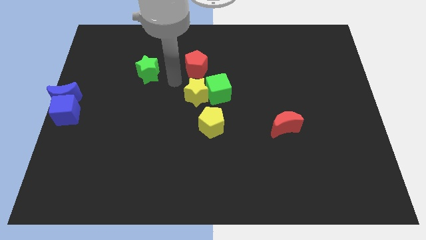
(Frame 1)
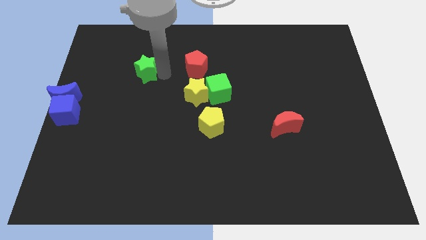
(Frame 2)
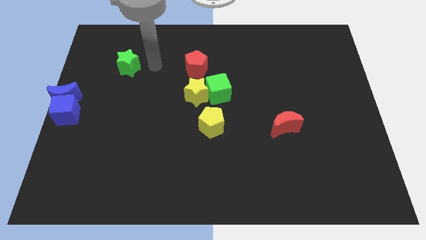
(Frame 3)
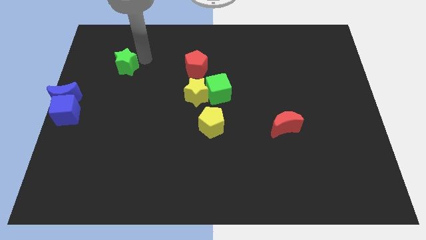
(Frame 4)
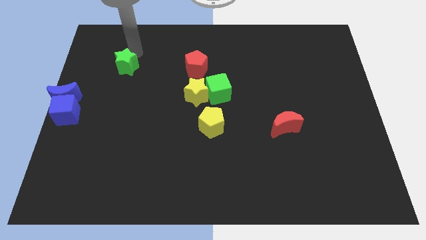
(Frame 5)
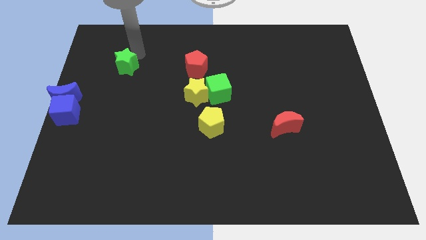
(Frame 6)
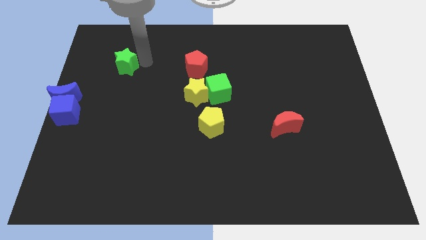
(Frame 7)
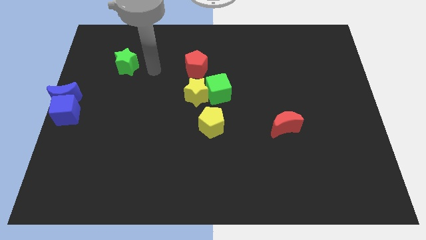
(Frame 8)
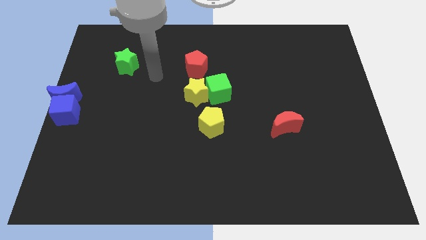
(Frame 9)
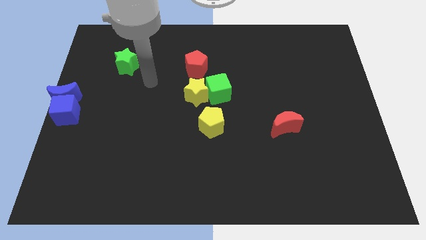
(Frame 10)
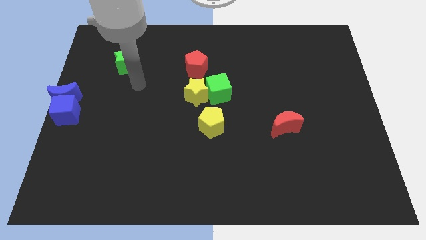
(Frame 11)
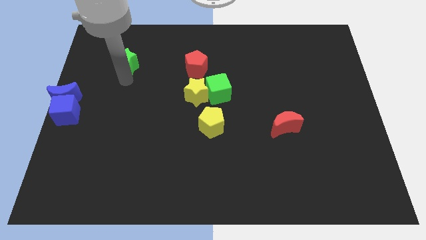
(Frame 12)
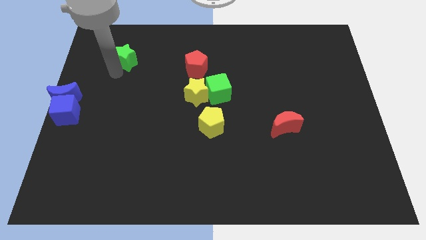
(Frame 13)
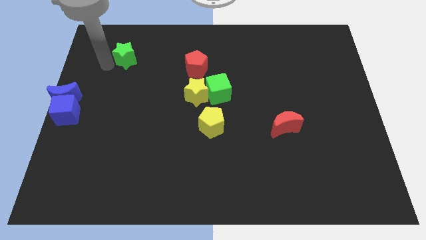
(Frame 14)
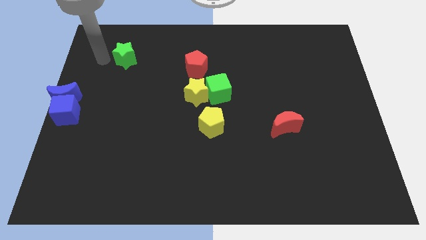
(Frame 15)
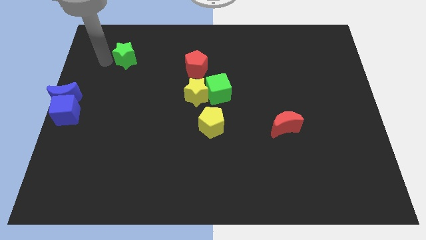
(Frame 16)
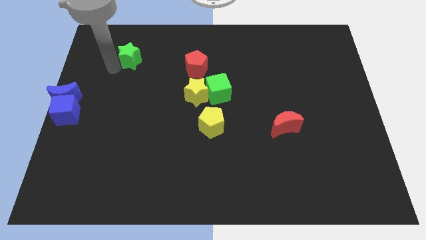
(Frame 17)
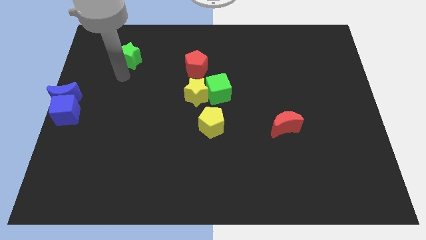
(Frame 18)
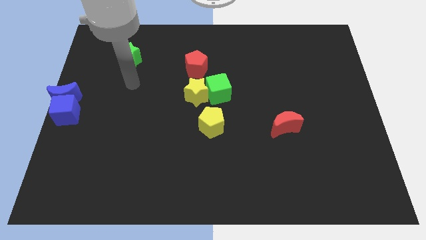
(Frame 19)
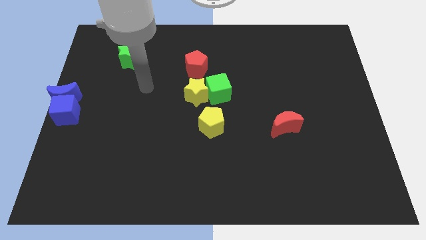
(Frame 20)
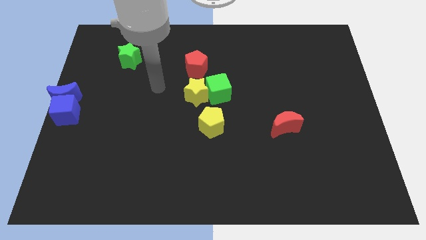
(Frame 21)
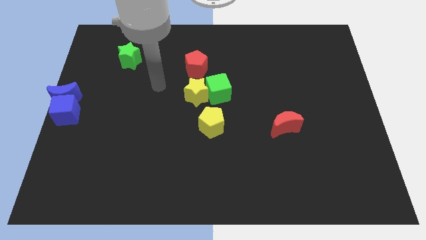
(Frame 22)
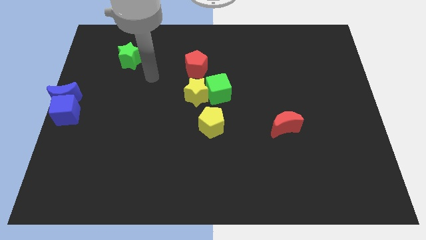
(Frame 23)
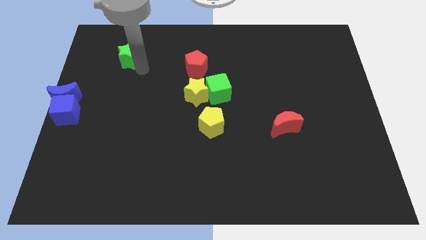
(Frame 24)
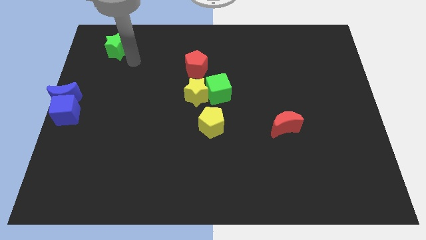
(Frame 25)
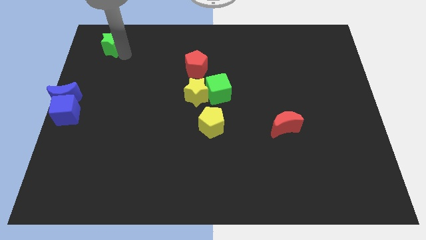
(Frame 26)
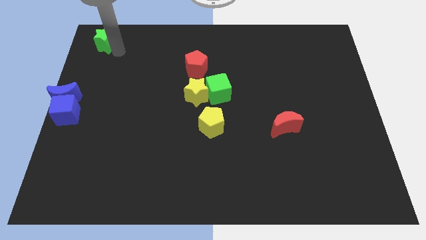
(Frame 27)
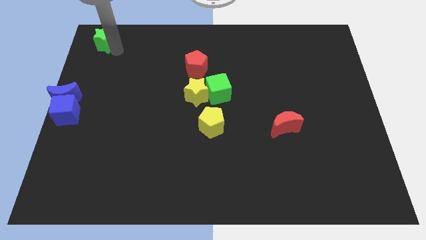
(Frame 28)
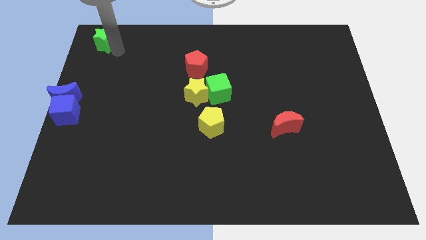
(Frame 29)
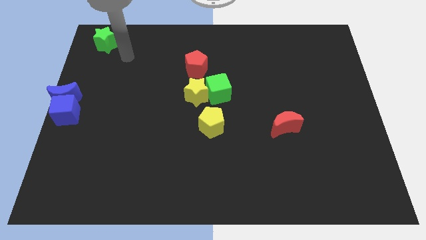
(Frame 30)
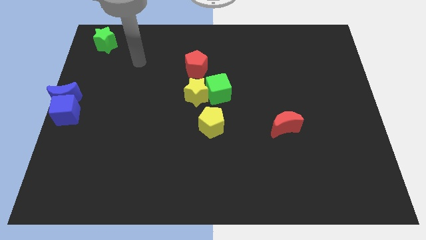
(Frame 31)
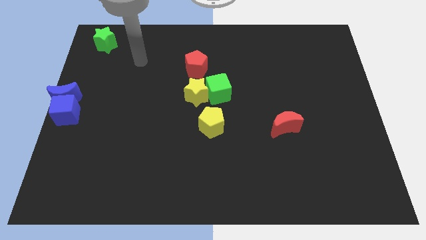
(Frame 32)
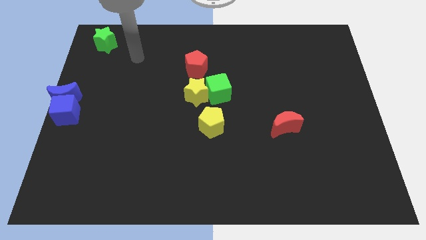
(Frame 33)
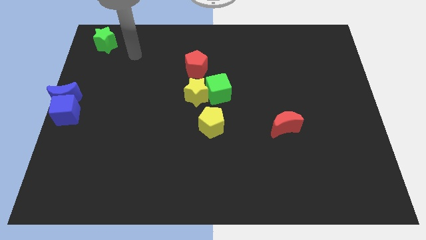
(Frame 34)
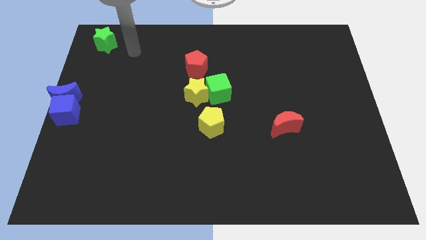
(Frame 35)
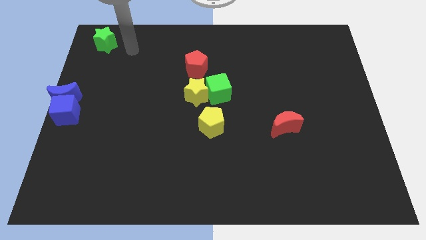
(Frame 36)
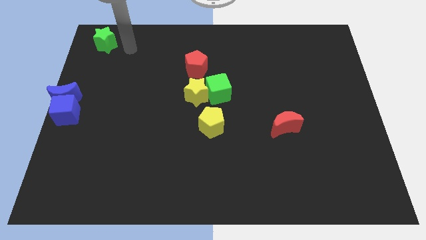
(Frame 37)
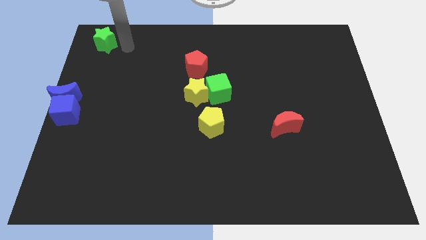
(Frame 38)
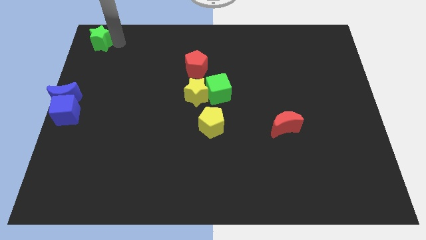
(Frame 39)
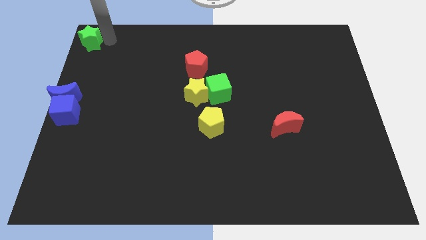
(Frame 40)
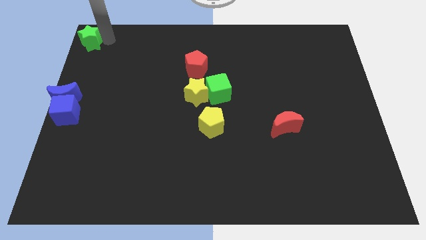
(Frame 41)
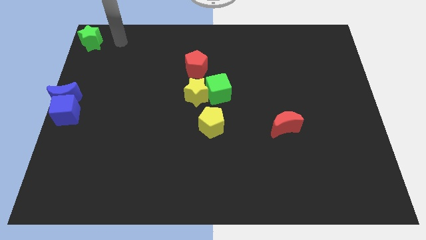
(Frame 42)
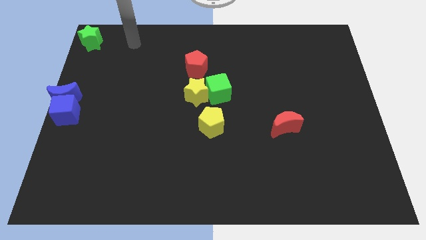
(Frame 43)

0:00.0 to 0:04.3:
push the green star to the top left corner of the board

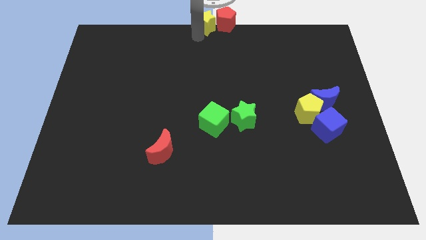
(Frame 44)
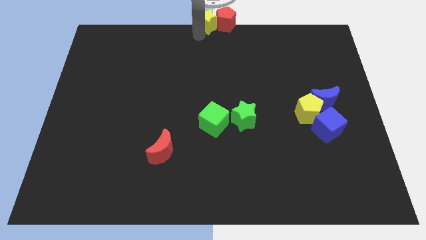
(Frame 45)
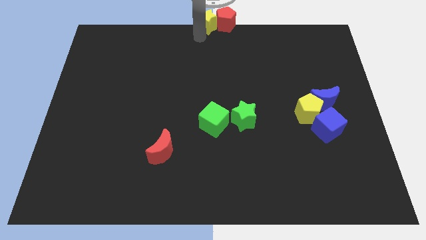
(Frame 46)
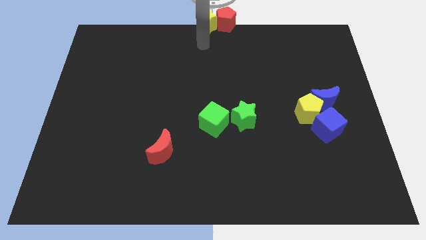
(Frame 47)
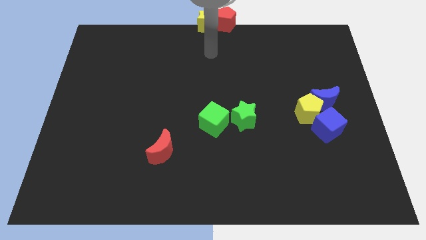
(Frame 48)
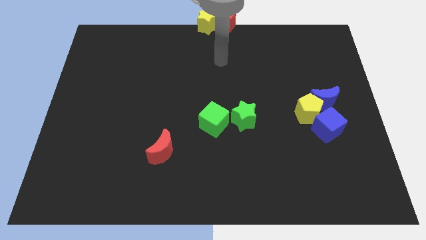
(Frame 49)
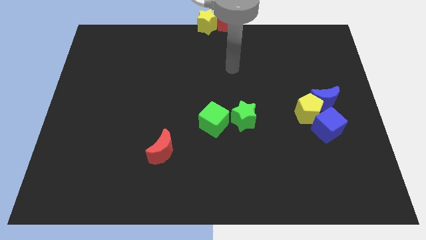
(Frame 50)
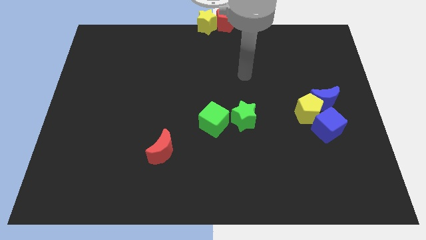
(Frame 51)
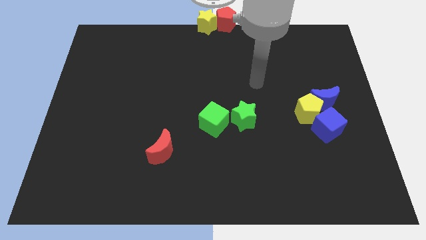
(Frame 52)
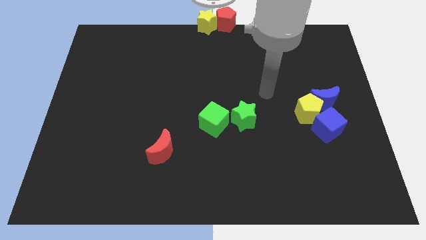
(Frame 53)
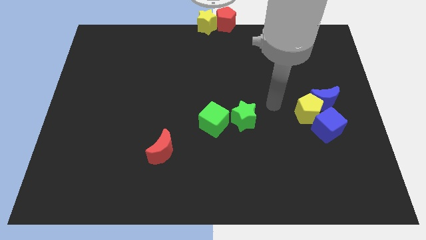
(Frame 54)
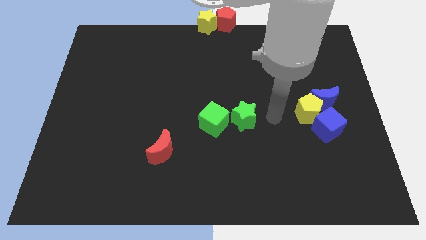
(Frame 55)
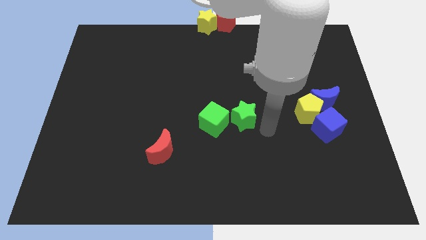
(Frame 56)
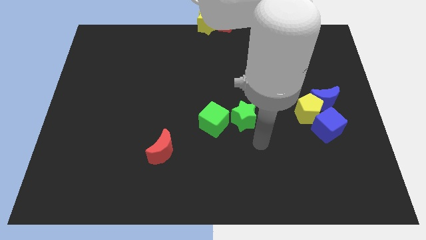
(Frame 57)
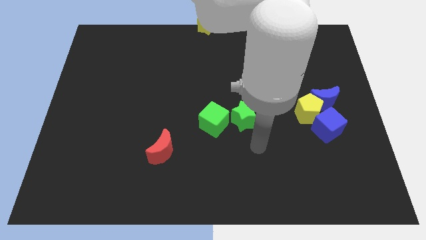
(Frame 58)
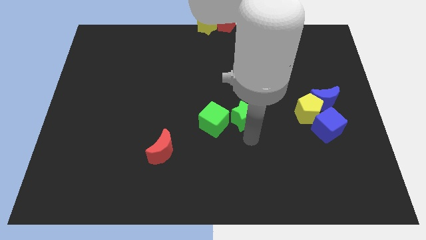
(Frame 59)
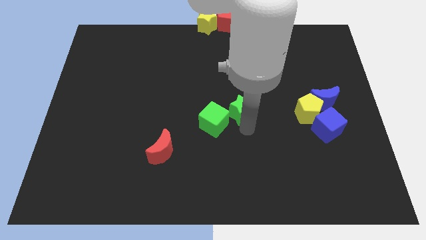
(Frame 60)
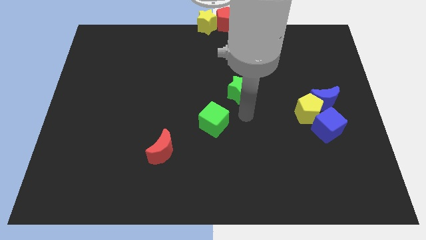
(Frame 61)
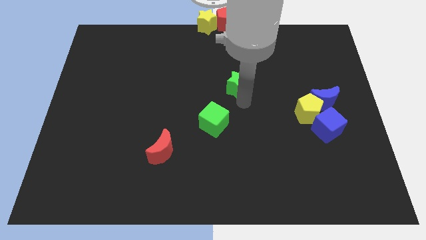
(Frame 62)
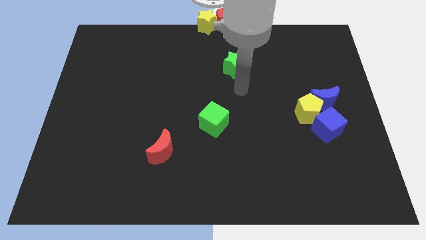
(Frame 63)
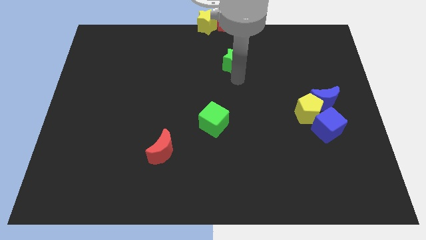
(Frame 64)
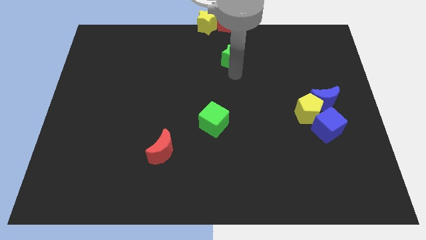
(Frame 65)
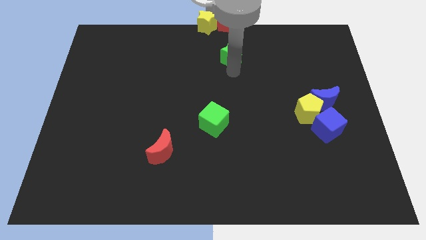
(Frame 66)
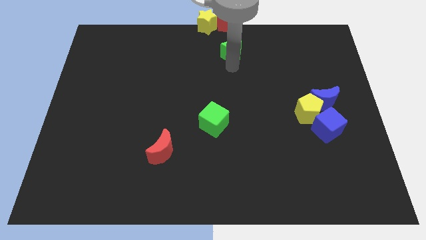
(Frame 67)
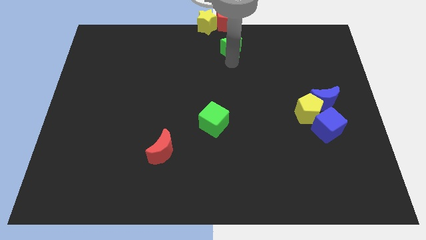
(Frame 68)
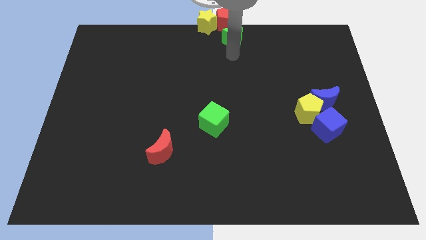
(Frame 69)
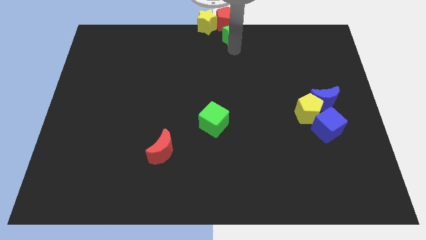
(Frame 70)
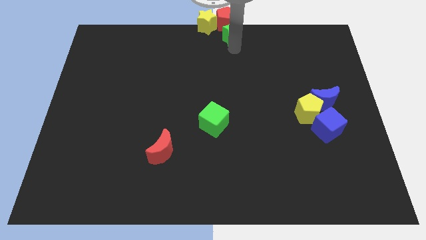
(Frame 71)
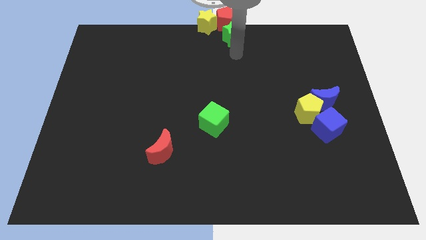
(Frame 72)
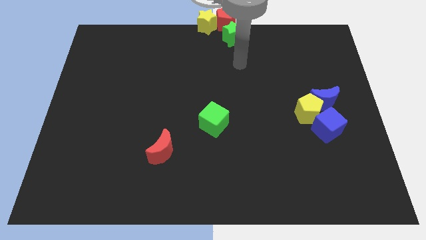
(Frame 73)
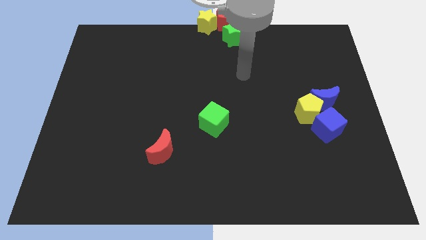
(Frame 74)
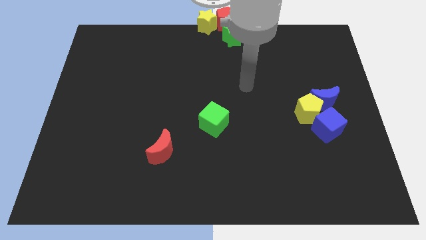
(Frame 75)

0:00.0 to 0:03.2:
move the green star towards top center

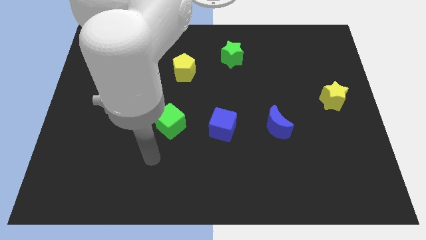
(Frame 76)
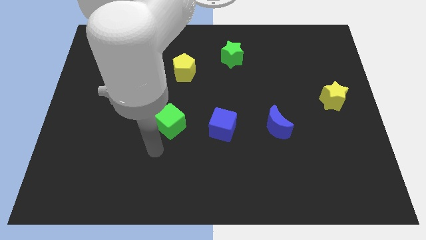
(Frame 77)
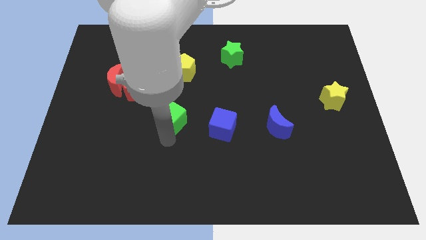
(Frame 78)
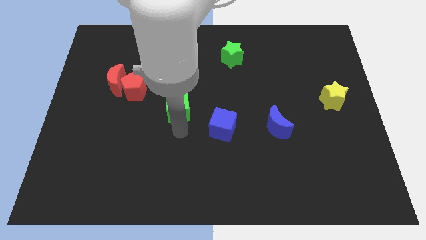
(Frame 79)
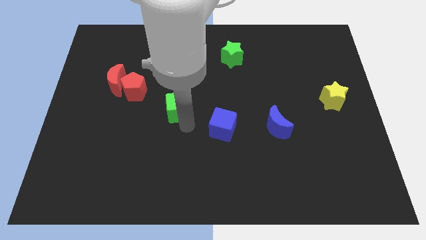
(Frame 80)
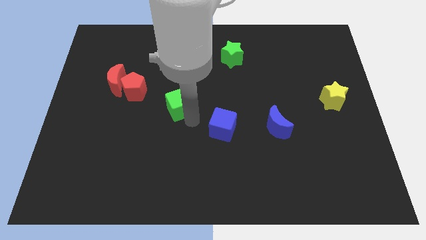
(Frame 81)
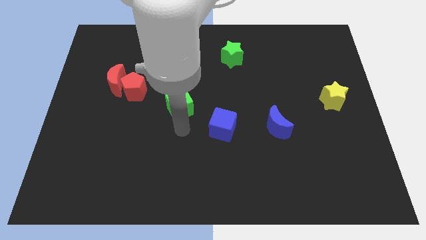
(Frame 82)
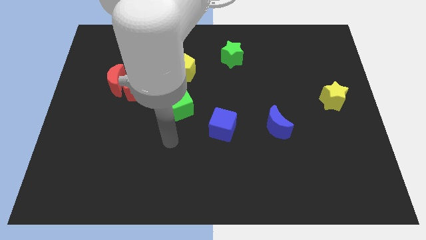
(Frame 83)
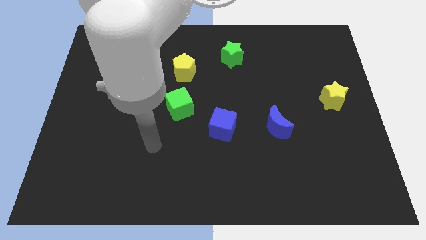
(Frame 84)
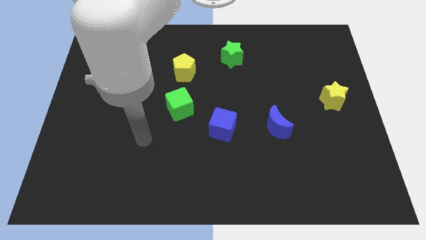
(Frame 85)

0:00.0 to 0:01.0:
place green cube below yellow pentagon

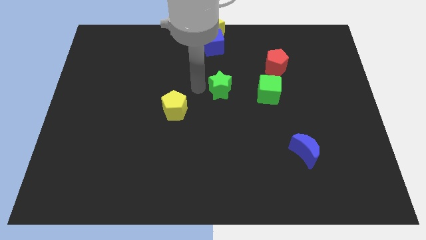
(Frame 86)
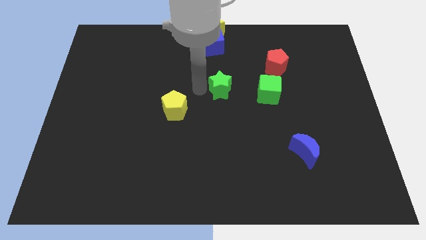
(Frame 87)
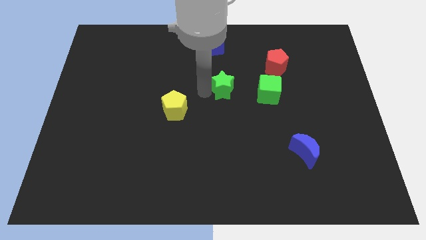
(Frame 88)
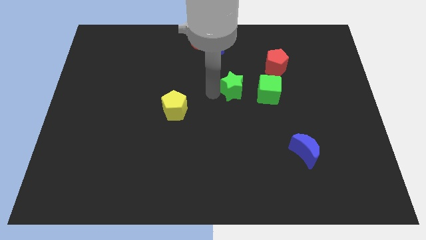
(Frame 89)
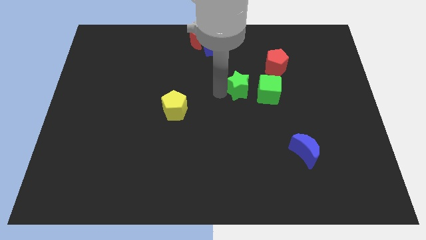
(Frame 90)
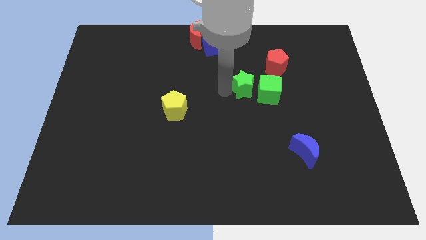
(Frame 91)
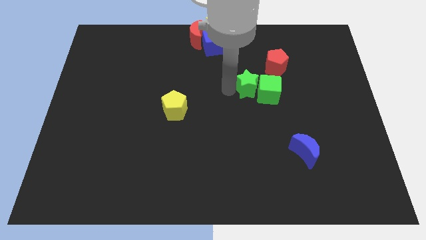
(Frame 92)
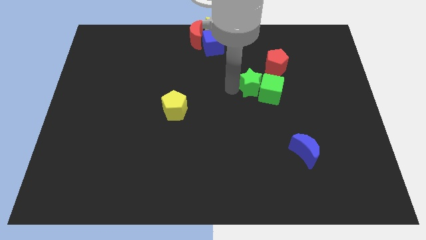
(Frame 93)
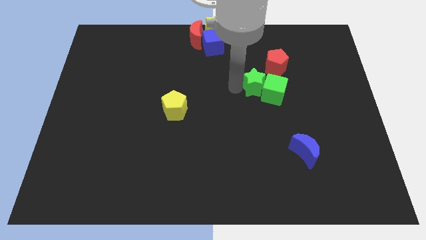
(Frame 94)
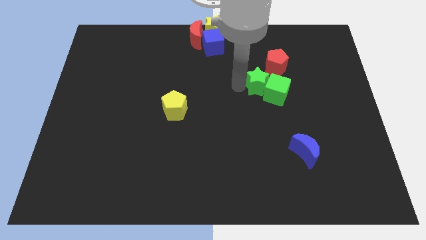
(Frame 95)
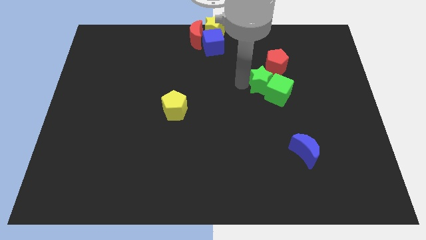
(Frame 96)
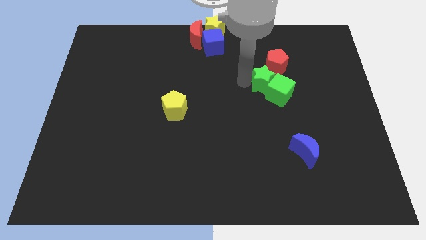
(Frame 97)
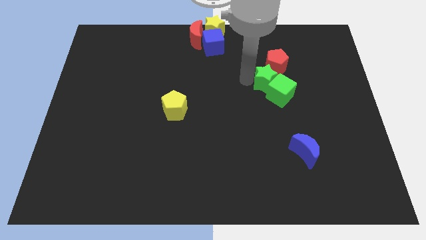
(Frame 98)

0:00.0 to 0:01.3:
push the green star to the left of the green cube
